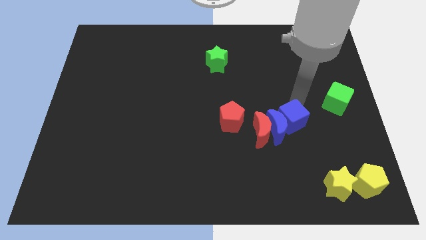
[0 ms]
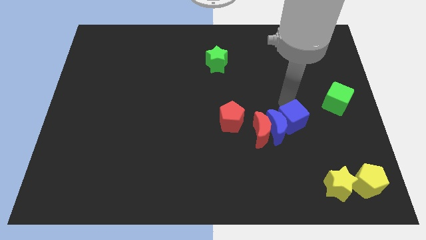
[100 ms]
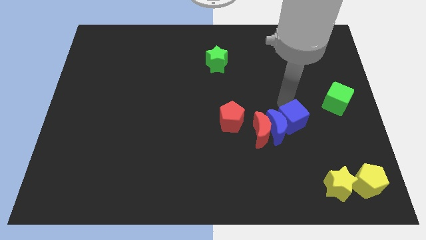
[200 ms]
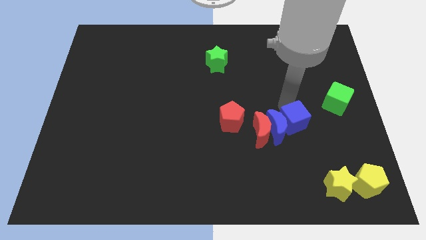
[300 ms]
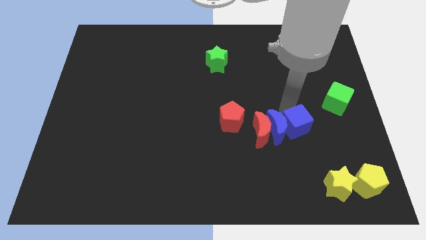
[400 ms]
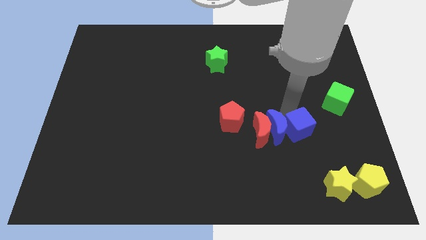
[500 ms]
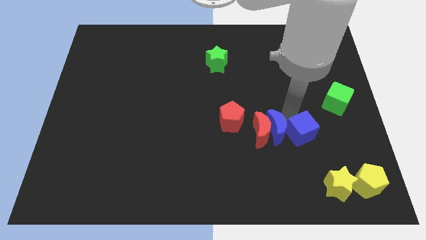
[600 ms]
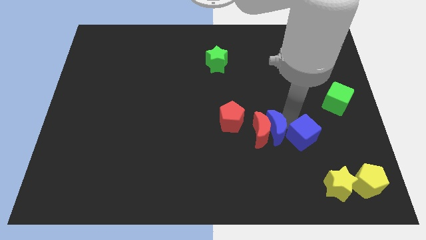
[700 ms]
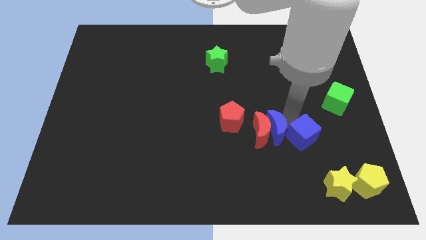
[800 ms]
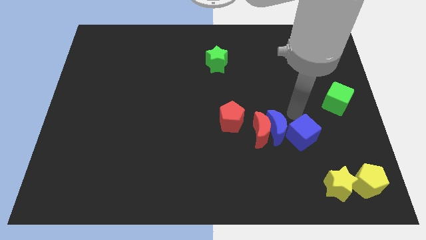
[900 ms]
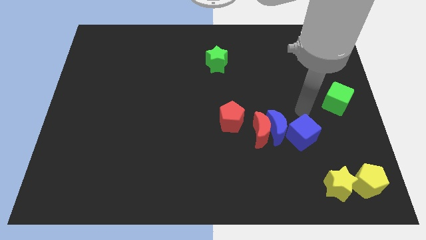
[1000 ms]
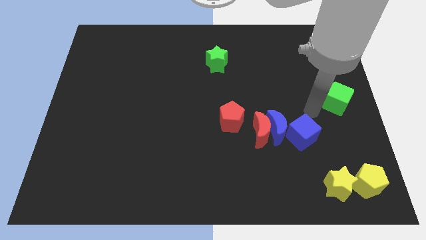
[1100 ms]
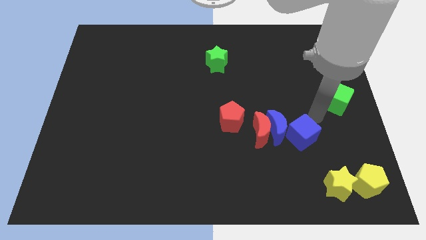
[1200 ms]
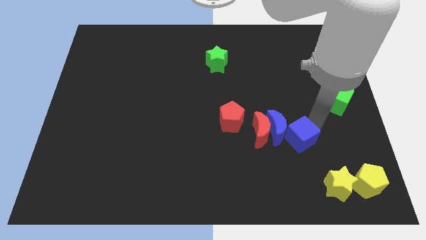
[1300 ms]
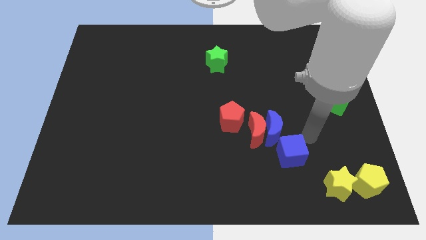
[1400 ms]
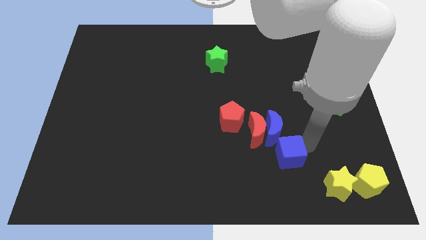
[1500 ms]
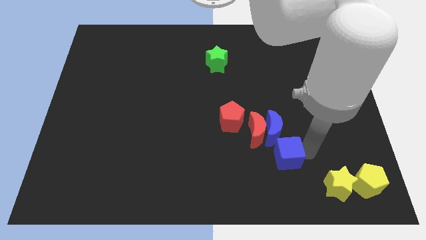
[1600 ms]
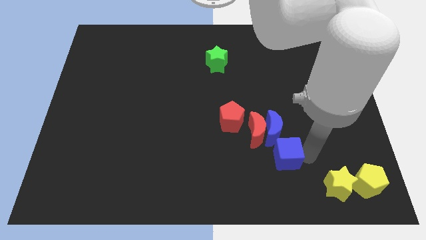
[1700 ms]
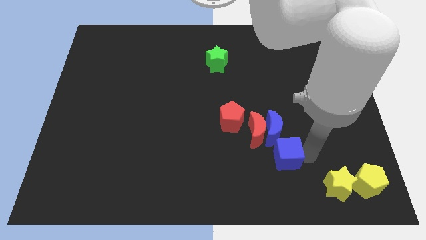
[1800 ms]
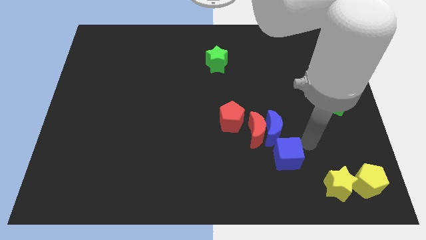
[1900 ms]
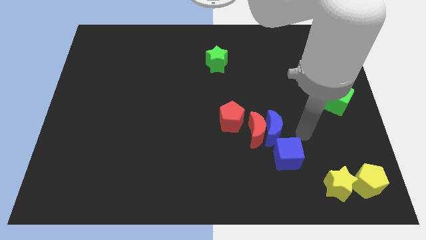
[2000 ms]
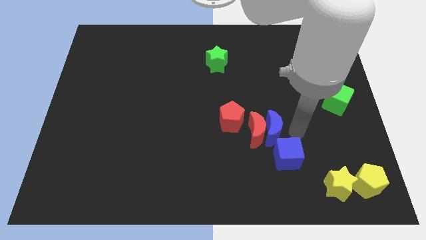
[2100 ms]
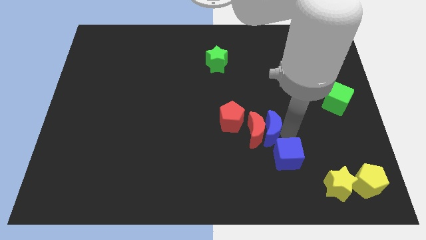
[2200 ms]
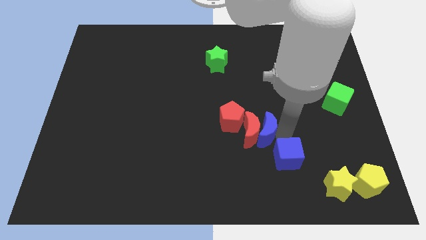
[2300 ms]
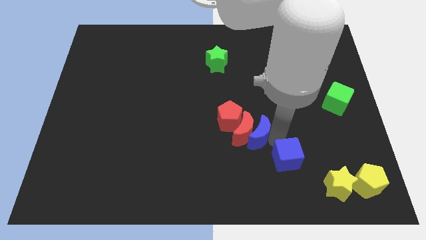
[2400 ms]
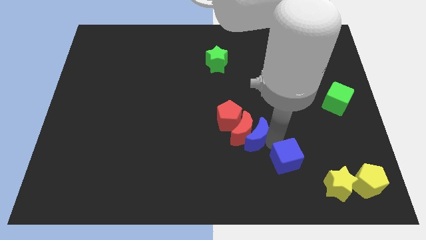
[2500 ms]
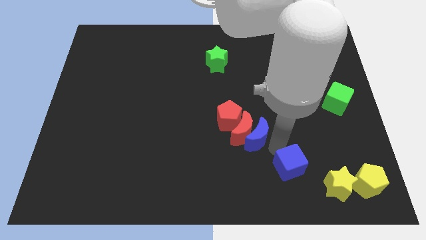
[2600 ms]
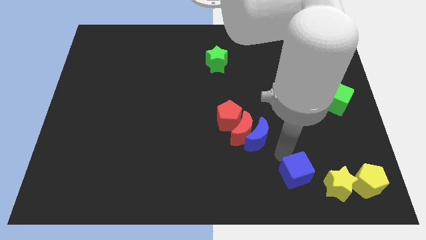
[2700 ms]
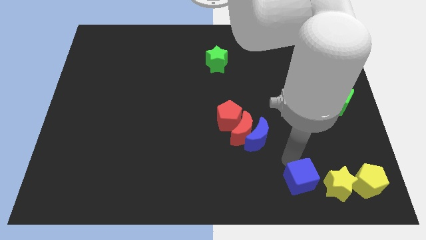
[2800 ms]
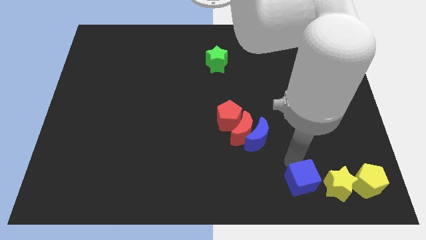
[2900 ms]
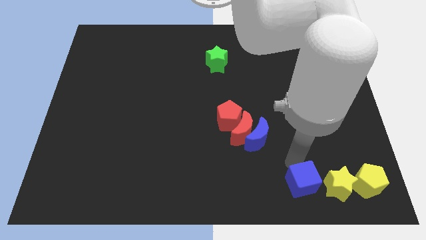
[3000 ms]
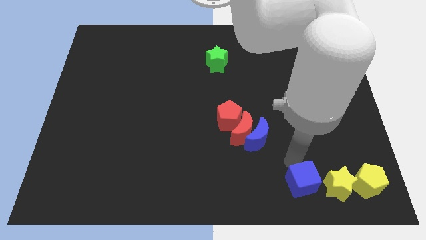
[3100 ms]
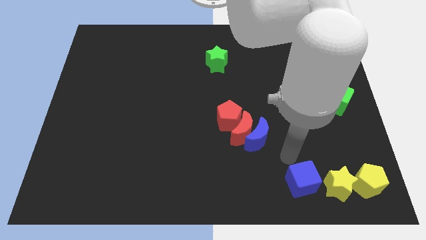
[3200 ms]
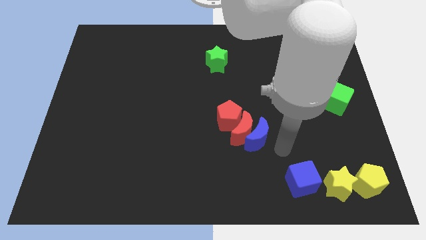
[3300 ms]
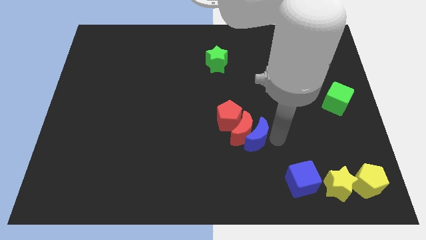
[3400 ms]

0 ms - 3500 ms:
place the blue cube to the left of the yellow star

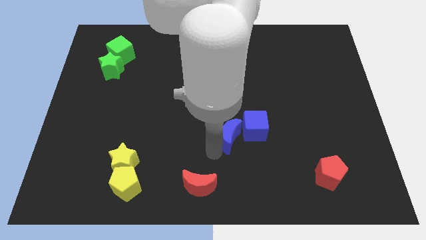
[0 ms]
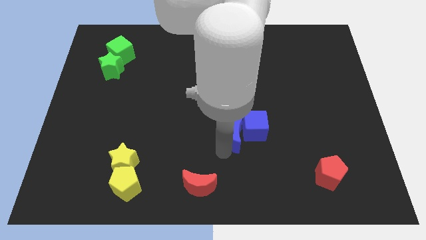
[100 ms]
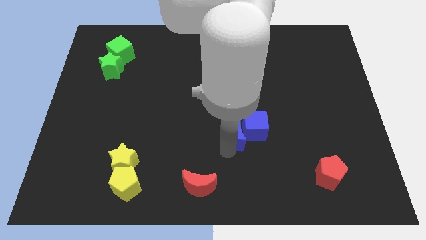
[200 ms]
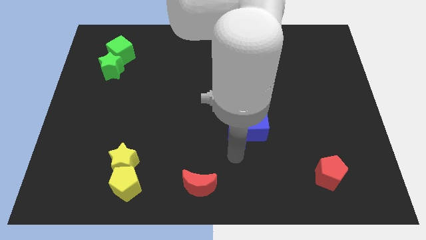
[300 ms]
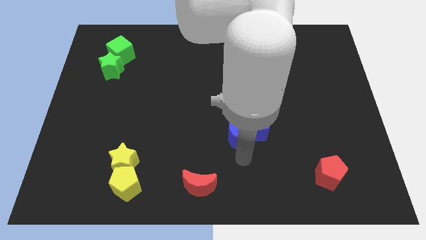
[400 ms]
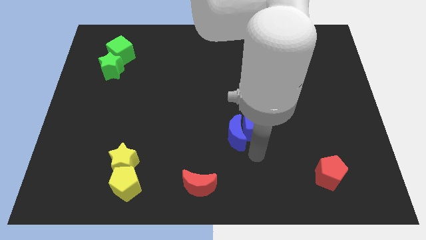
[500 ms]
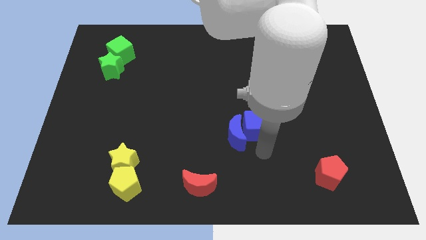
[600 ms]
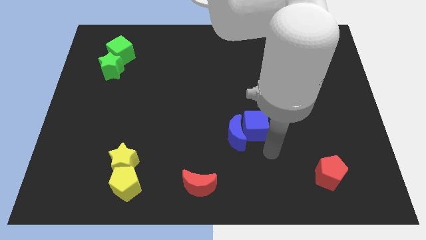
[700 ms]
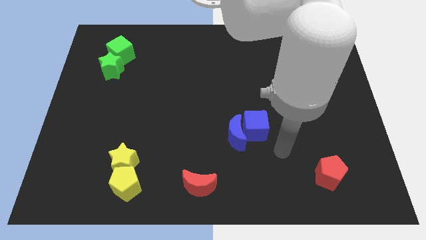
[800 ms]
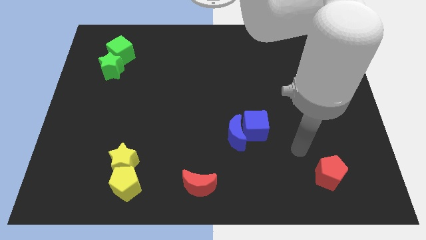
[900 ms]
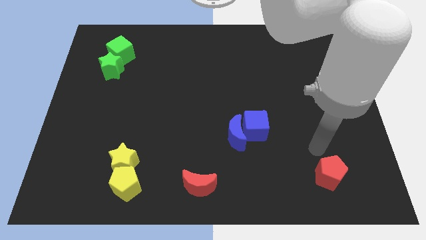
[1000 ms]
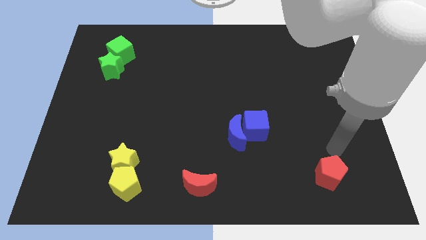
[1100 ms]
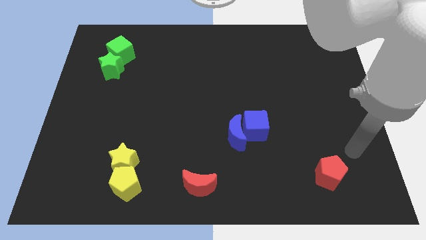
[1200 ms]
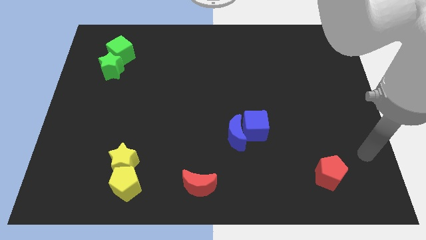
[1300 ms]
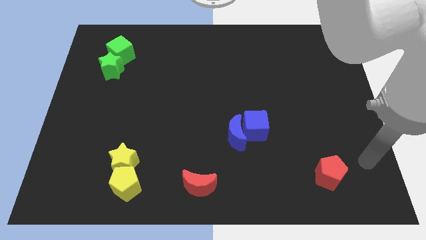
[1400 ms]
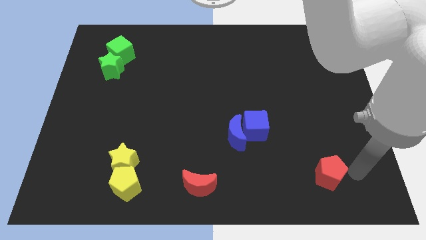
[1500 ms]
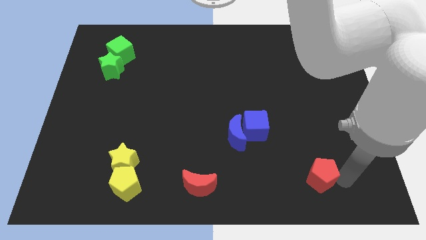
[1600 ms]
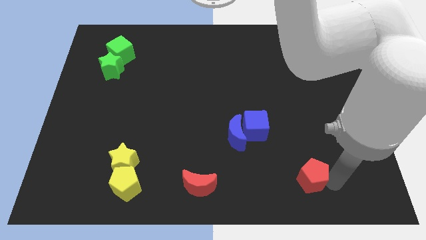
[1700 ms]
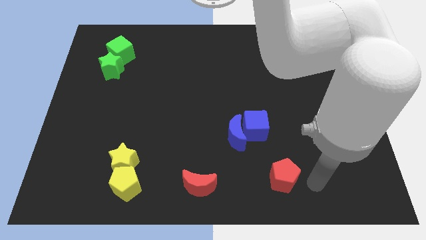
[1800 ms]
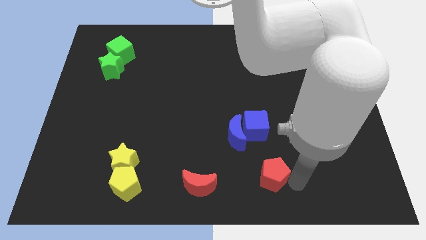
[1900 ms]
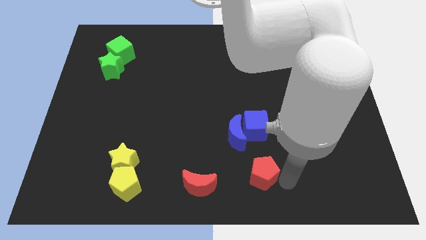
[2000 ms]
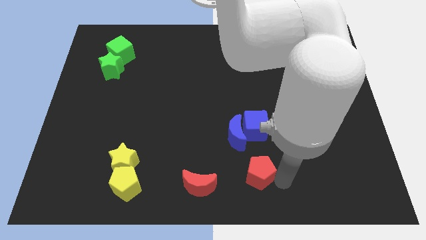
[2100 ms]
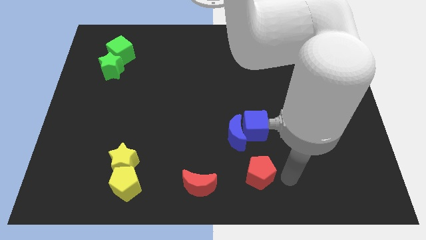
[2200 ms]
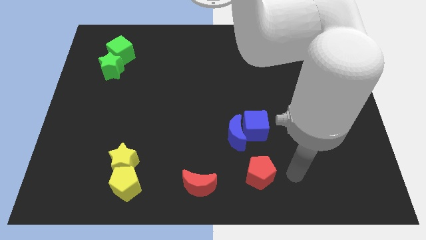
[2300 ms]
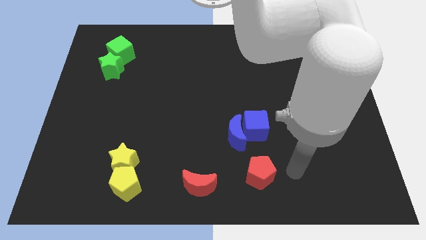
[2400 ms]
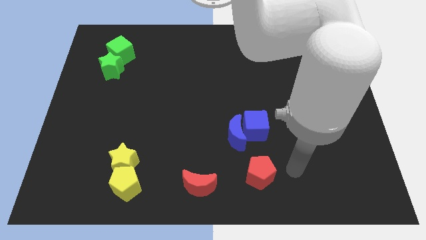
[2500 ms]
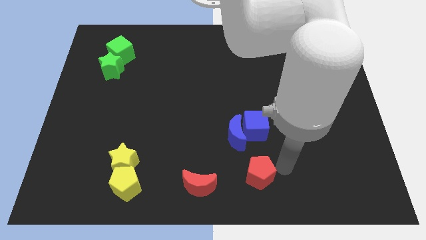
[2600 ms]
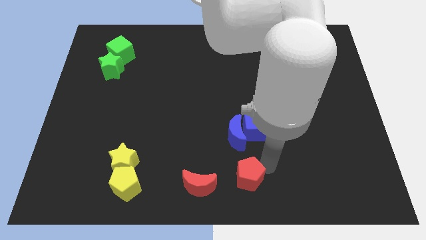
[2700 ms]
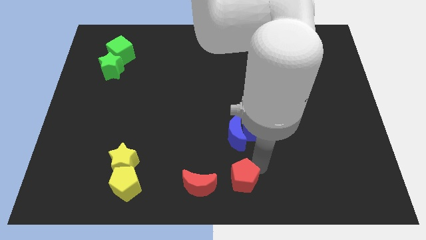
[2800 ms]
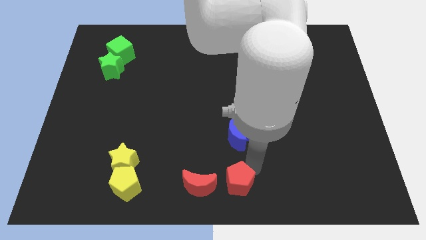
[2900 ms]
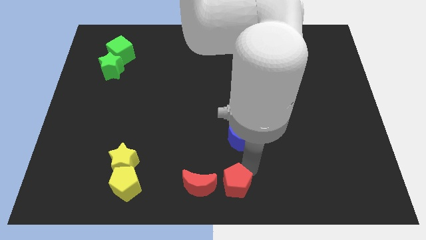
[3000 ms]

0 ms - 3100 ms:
push the red pentagon close to the right side of the red moon

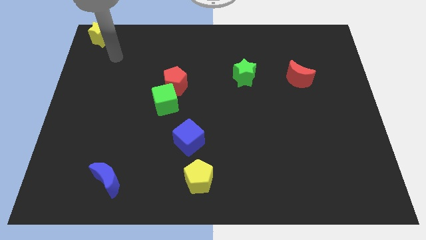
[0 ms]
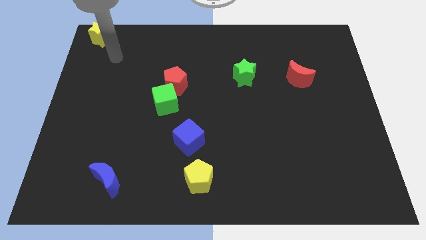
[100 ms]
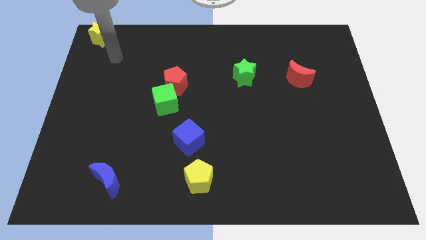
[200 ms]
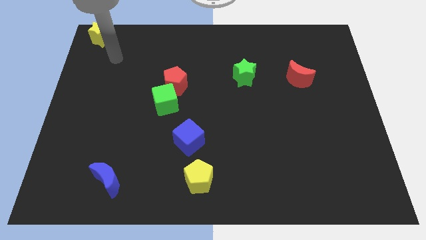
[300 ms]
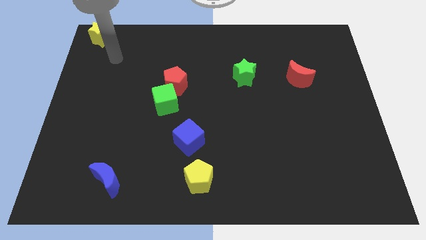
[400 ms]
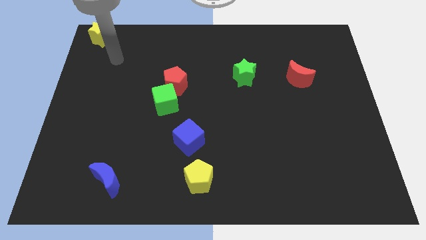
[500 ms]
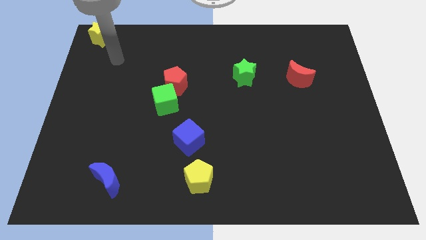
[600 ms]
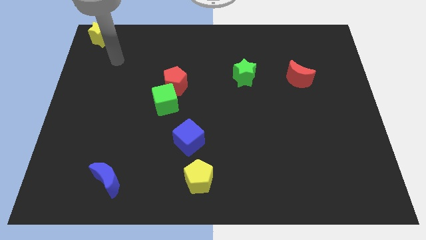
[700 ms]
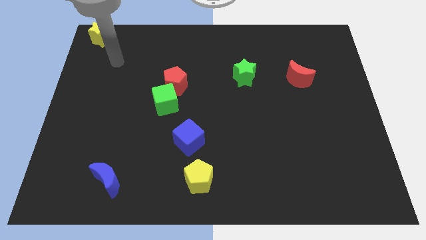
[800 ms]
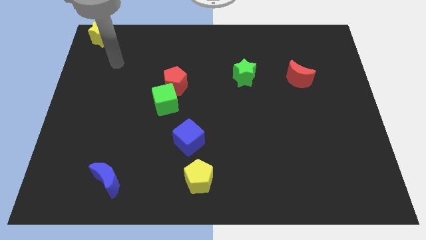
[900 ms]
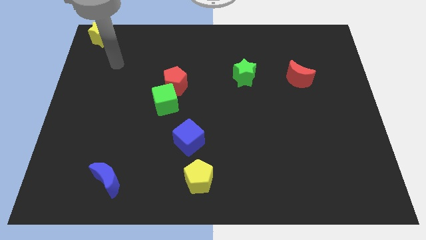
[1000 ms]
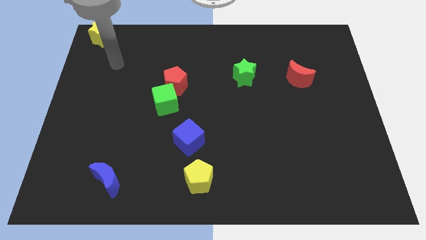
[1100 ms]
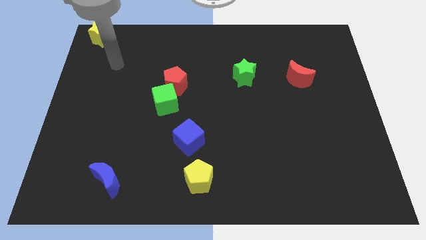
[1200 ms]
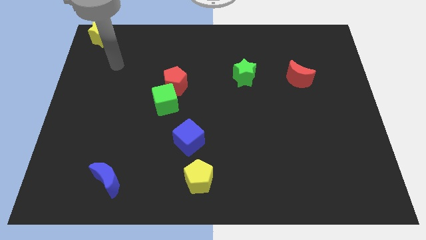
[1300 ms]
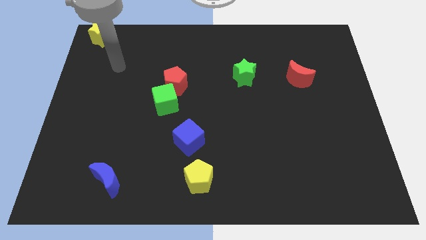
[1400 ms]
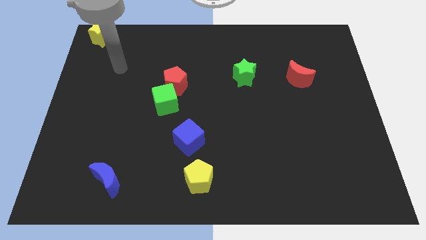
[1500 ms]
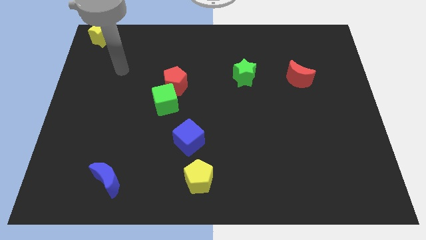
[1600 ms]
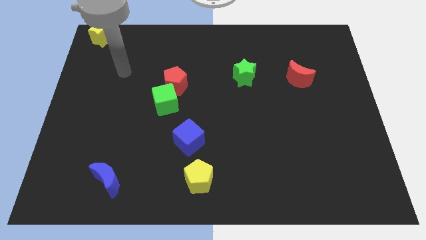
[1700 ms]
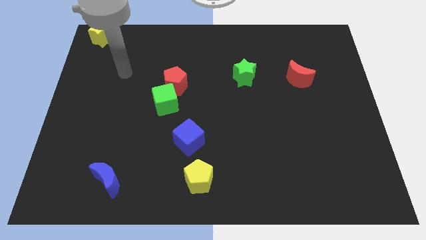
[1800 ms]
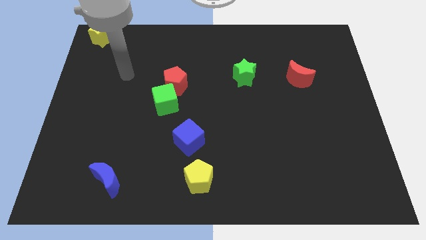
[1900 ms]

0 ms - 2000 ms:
move your arm towards green cube

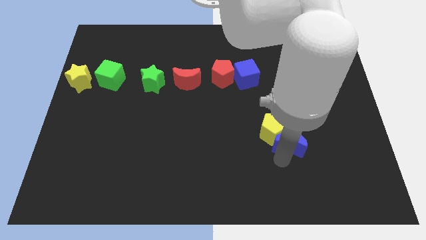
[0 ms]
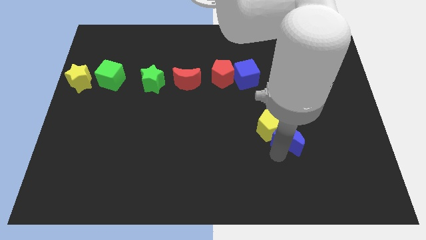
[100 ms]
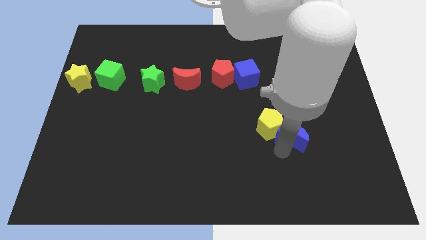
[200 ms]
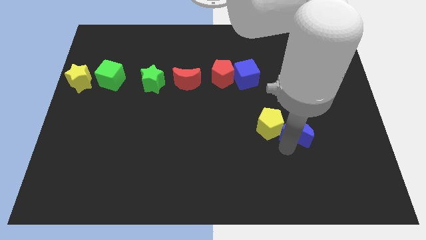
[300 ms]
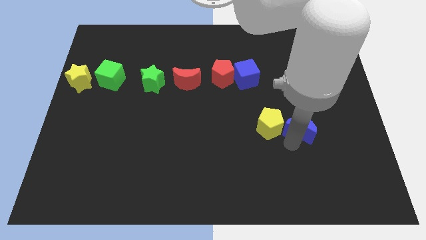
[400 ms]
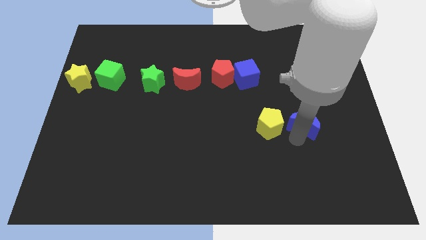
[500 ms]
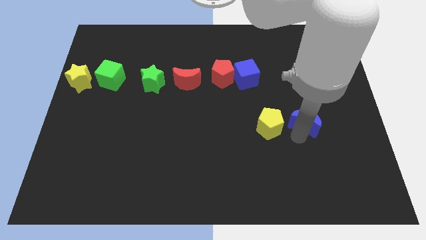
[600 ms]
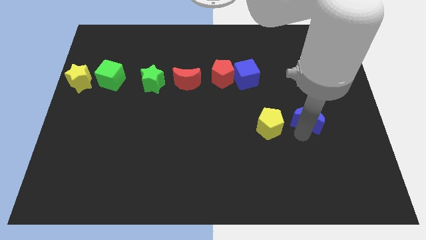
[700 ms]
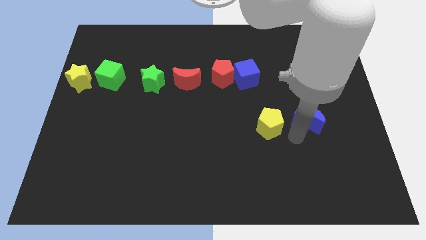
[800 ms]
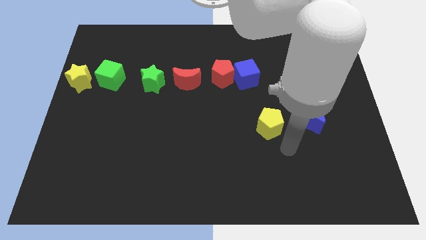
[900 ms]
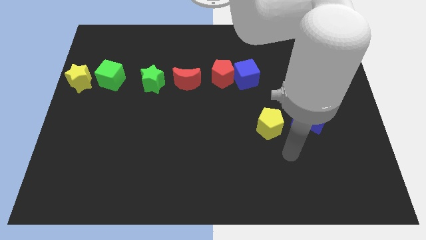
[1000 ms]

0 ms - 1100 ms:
separate blue moon and yellow pentagon
